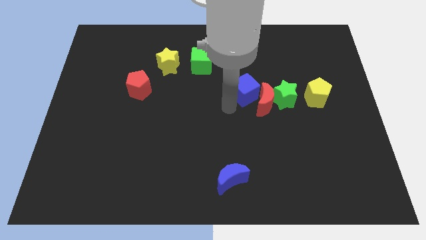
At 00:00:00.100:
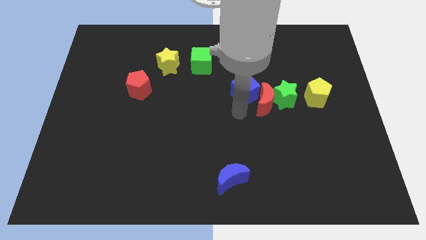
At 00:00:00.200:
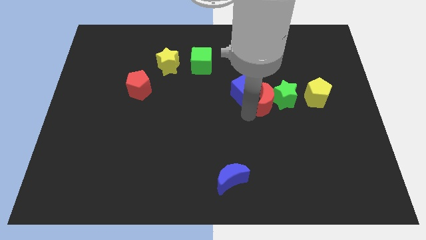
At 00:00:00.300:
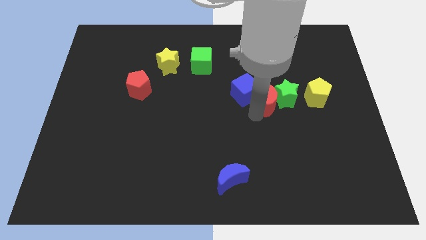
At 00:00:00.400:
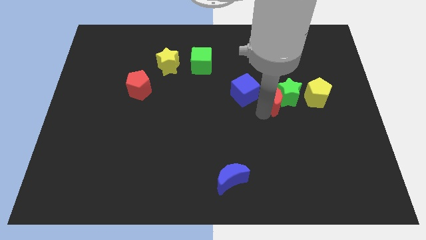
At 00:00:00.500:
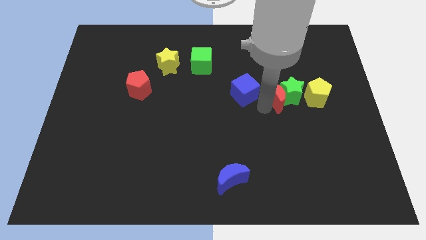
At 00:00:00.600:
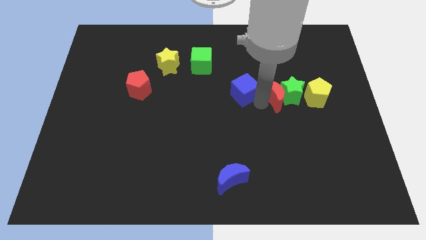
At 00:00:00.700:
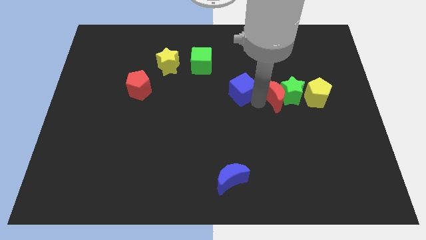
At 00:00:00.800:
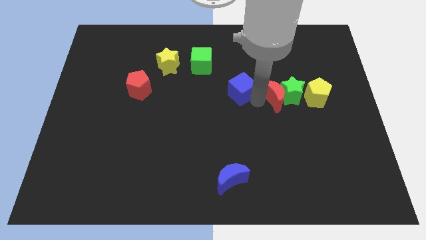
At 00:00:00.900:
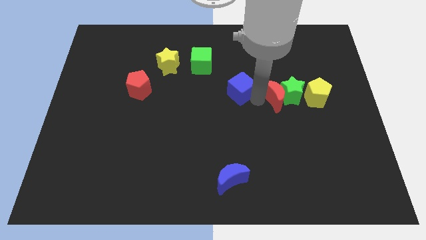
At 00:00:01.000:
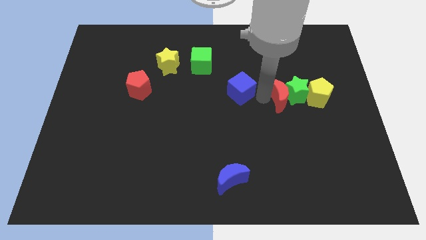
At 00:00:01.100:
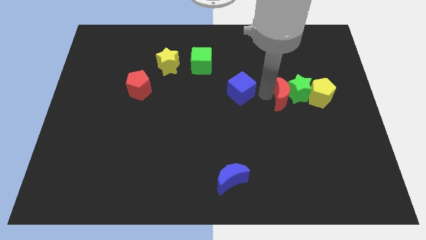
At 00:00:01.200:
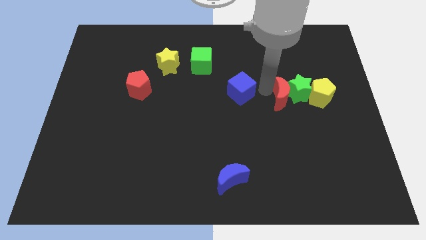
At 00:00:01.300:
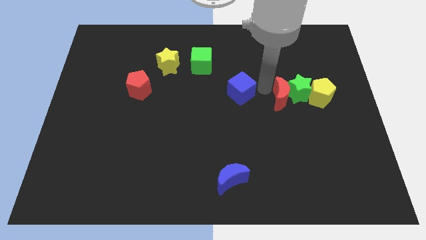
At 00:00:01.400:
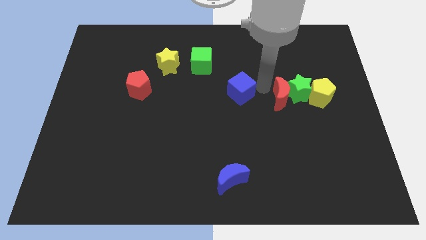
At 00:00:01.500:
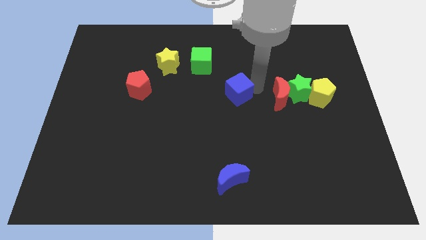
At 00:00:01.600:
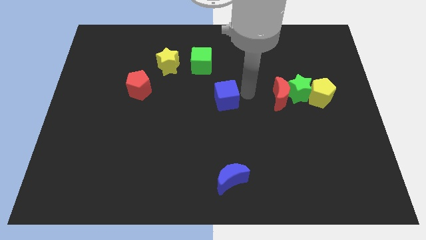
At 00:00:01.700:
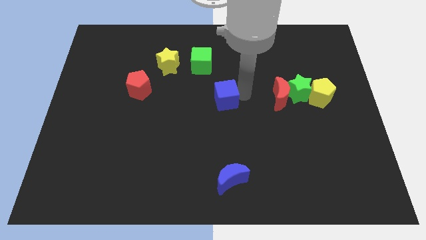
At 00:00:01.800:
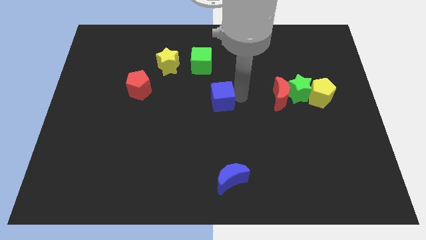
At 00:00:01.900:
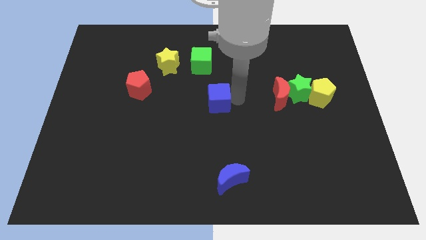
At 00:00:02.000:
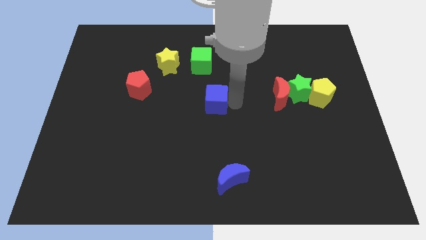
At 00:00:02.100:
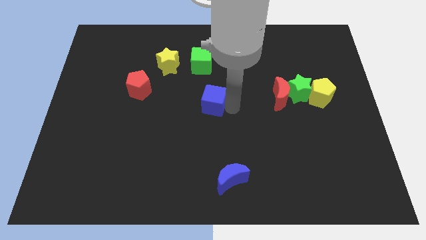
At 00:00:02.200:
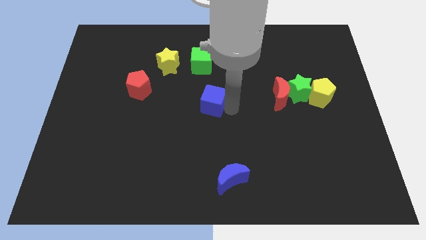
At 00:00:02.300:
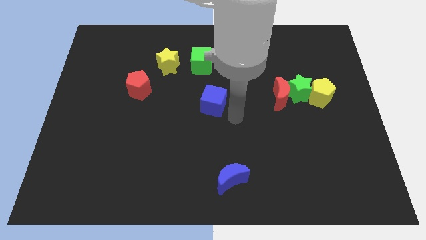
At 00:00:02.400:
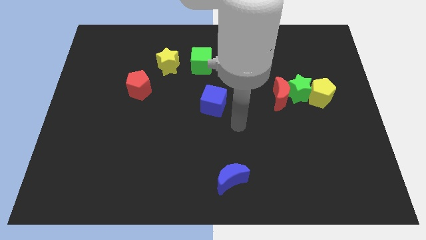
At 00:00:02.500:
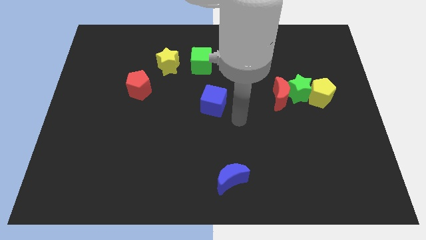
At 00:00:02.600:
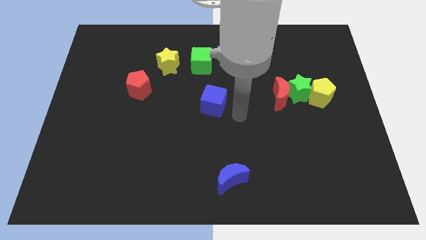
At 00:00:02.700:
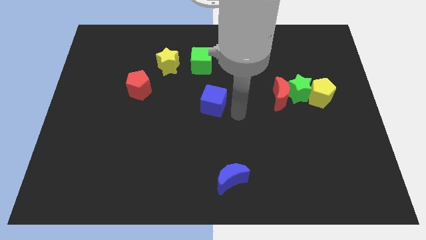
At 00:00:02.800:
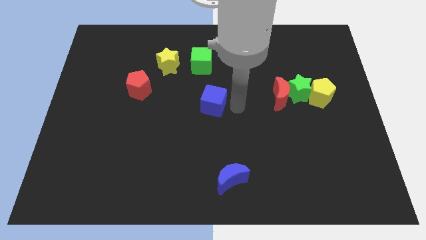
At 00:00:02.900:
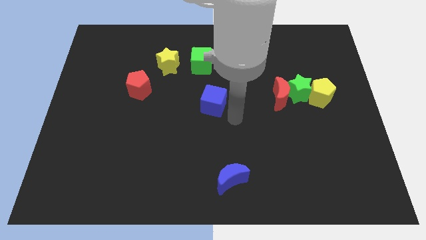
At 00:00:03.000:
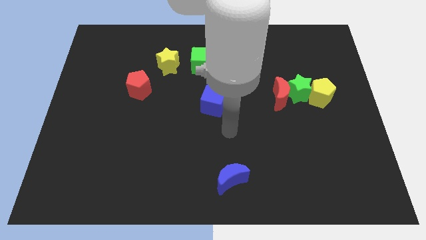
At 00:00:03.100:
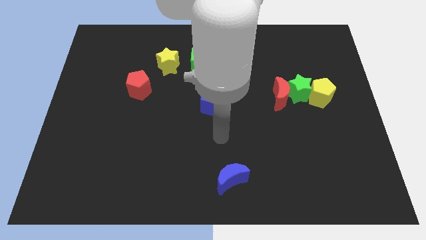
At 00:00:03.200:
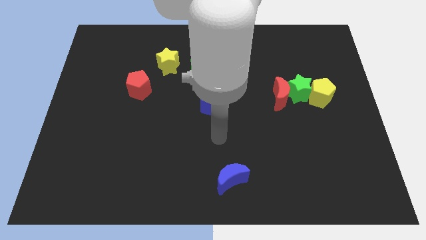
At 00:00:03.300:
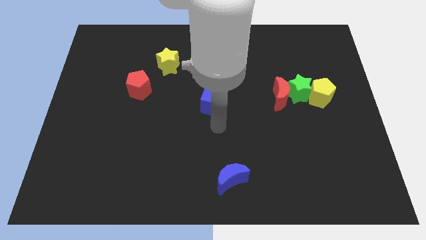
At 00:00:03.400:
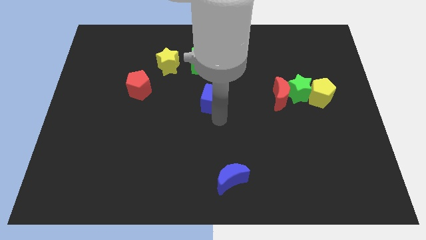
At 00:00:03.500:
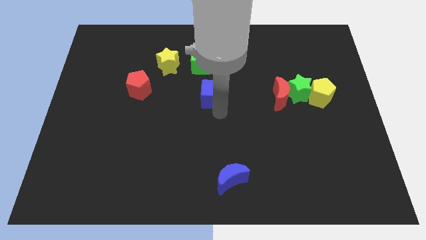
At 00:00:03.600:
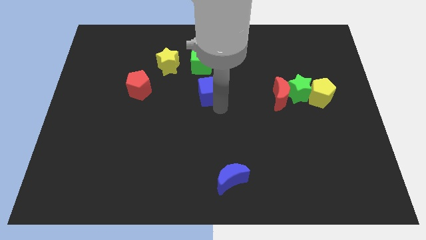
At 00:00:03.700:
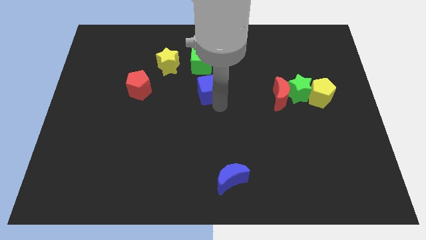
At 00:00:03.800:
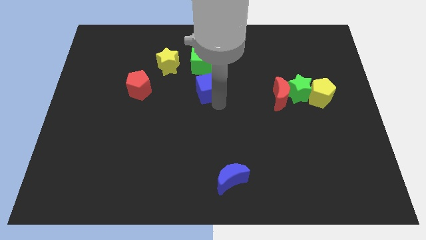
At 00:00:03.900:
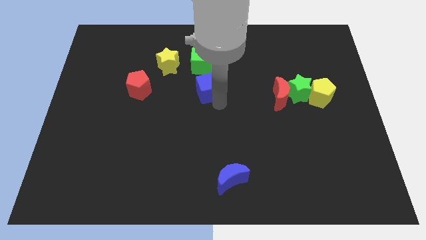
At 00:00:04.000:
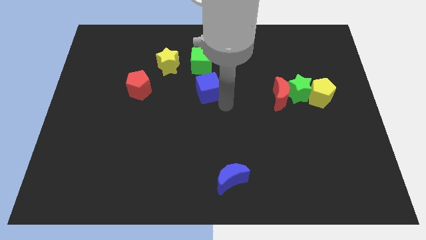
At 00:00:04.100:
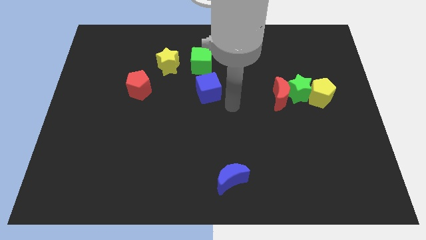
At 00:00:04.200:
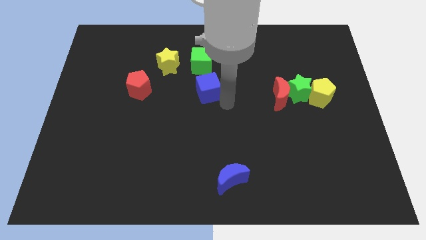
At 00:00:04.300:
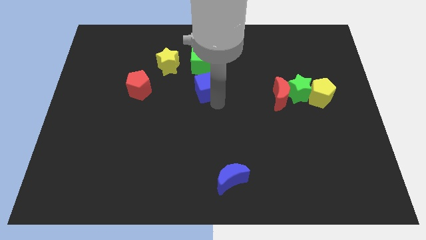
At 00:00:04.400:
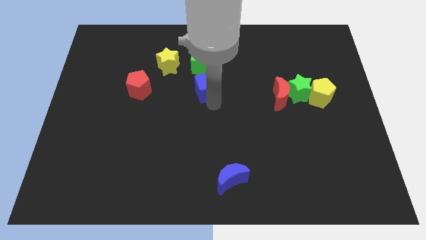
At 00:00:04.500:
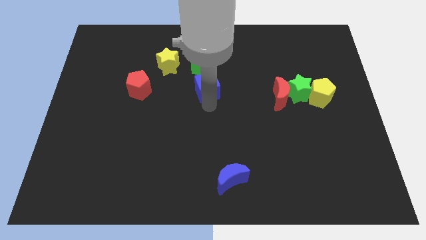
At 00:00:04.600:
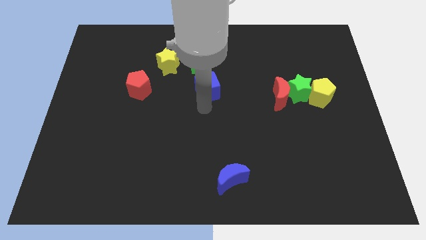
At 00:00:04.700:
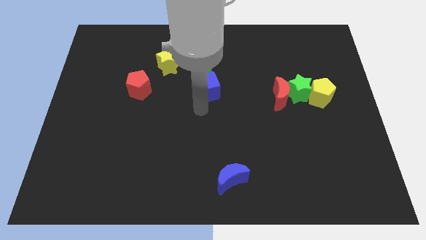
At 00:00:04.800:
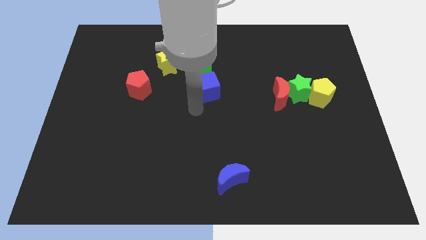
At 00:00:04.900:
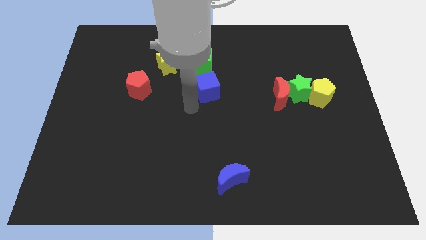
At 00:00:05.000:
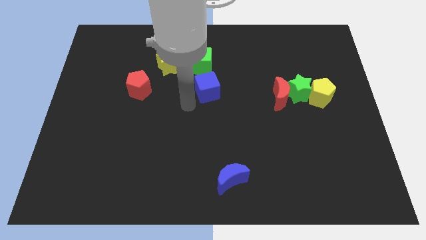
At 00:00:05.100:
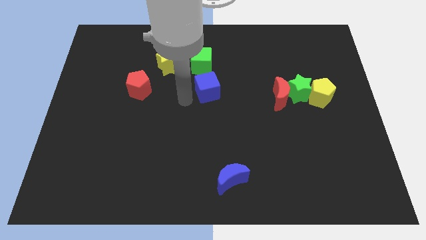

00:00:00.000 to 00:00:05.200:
move the blue cube close to the green cube

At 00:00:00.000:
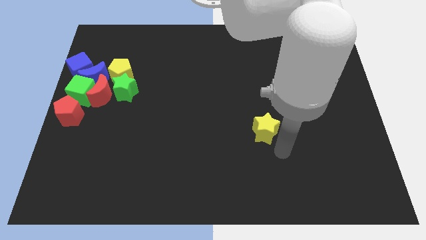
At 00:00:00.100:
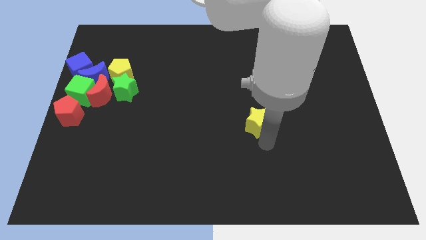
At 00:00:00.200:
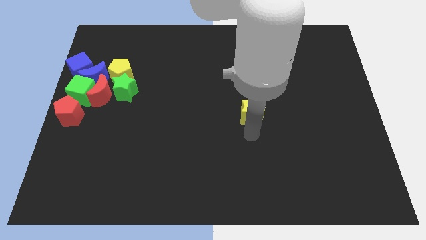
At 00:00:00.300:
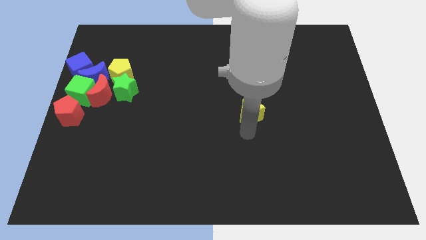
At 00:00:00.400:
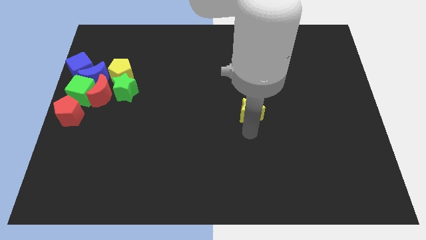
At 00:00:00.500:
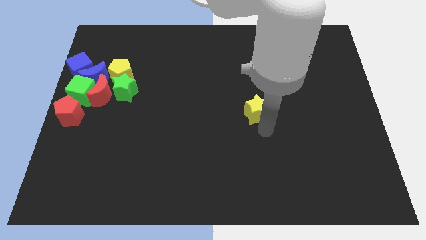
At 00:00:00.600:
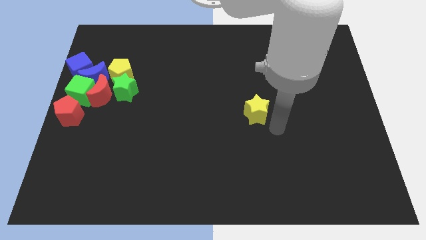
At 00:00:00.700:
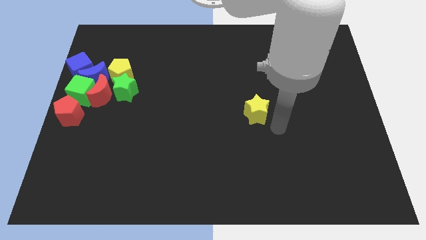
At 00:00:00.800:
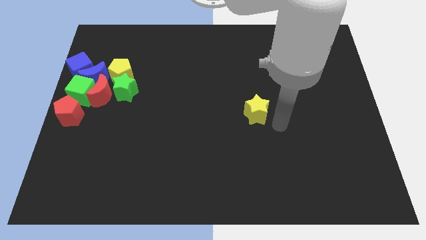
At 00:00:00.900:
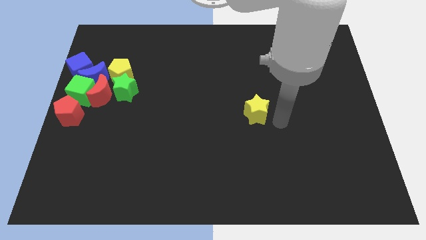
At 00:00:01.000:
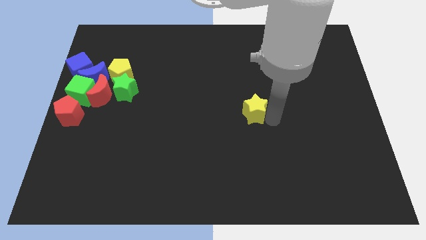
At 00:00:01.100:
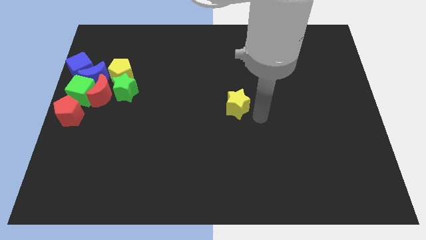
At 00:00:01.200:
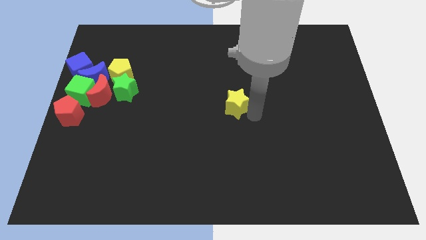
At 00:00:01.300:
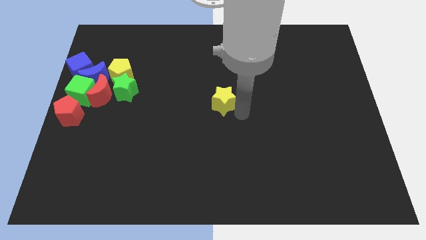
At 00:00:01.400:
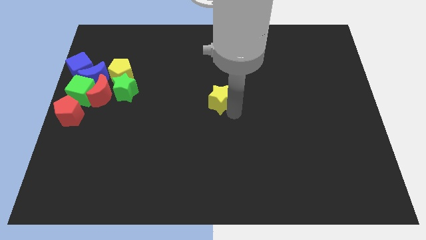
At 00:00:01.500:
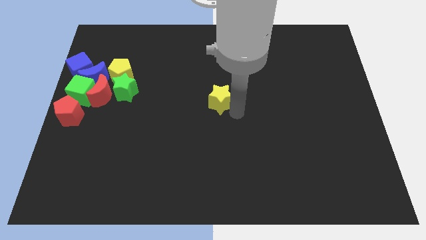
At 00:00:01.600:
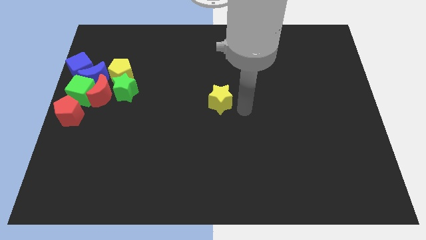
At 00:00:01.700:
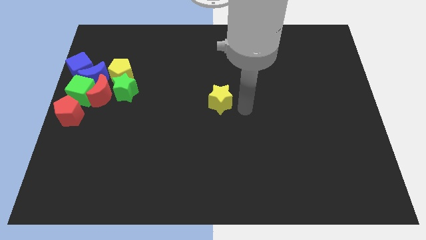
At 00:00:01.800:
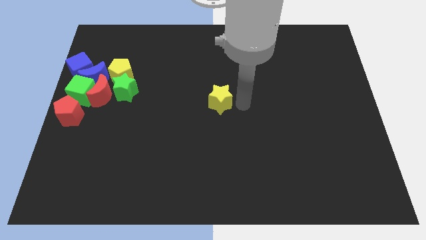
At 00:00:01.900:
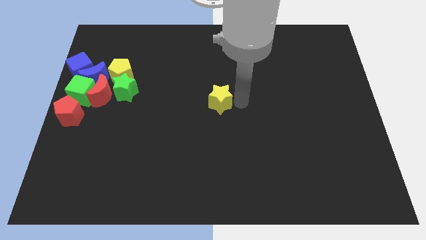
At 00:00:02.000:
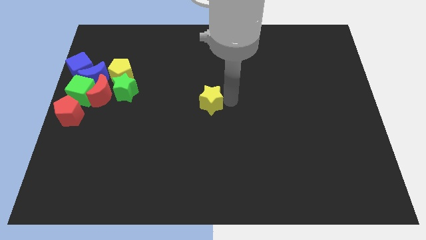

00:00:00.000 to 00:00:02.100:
move the yellow star towards the center of the board

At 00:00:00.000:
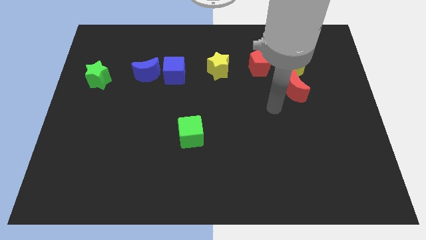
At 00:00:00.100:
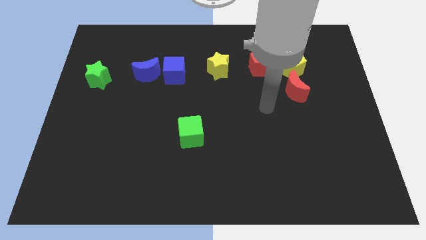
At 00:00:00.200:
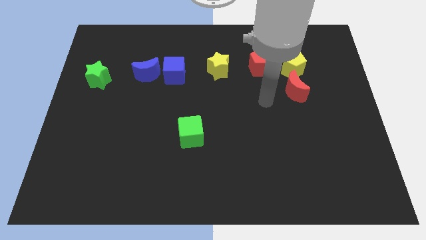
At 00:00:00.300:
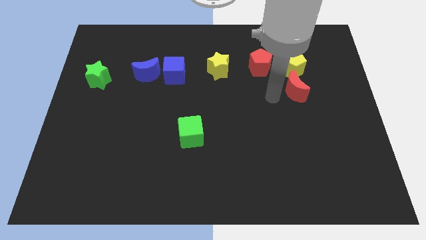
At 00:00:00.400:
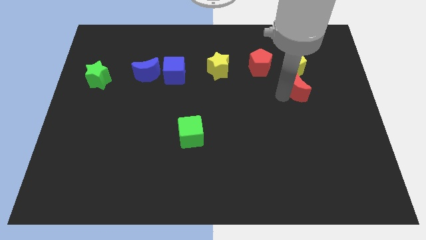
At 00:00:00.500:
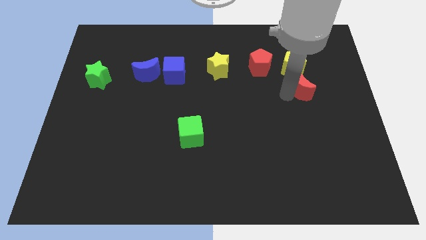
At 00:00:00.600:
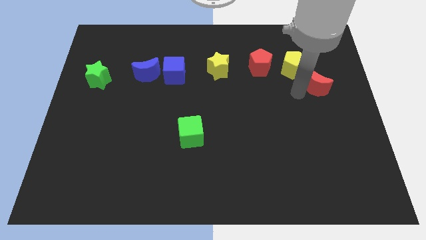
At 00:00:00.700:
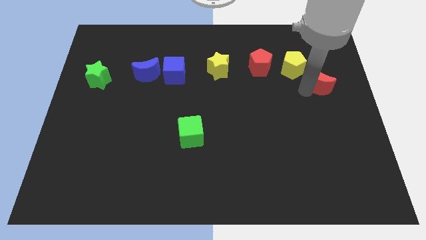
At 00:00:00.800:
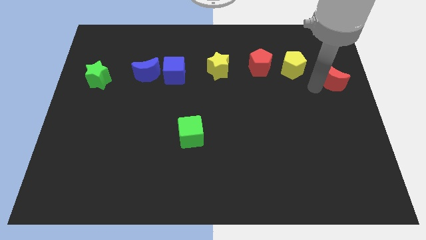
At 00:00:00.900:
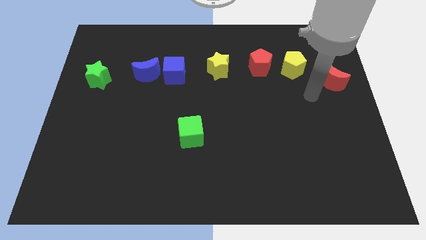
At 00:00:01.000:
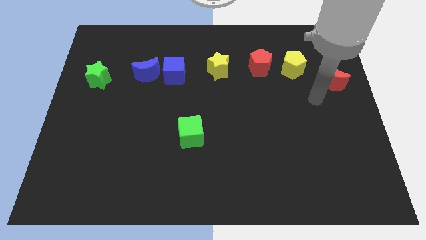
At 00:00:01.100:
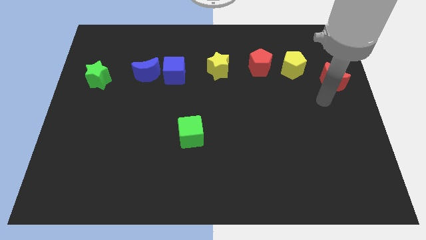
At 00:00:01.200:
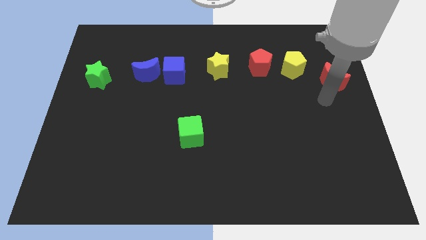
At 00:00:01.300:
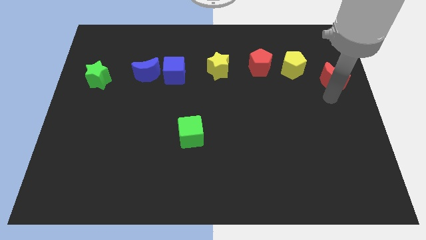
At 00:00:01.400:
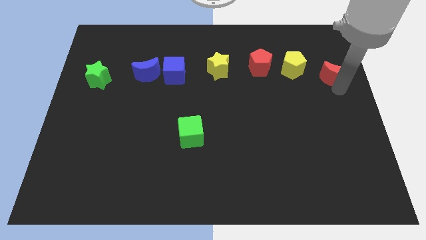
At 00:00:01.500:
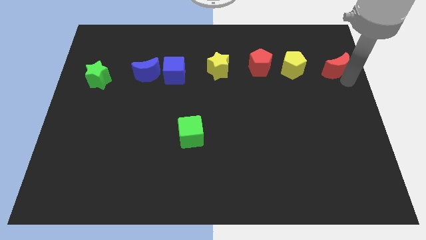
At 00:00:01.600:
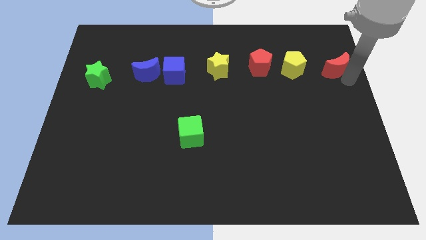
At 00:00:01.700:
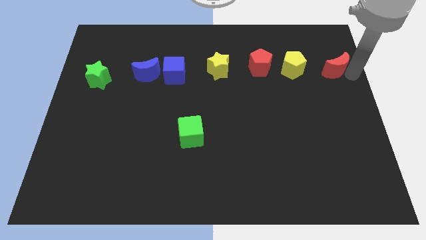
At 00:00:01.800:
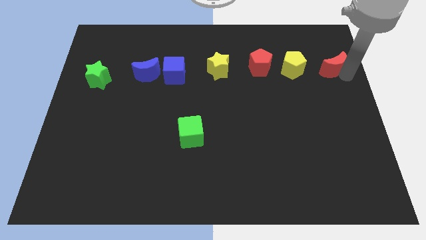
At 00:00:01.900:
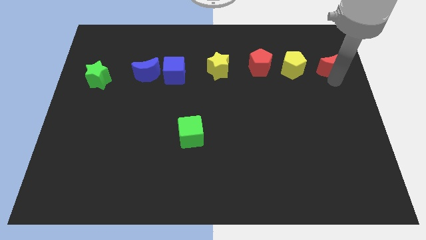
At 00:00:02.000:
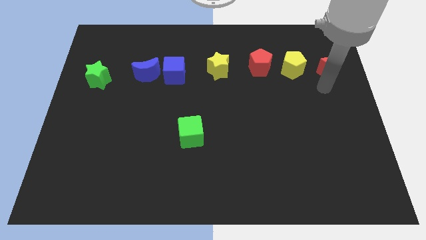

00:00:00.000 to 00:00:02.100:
drag the red moon to the right side of the yellow pentagon
